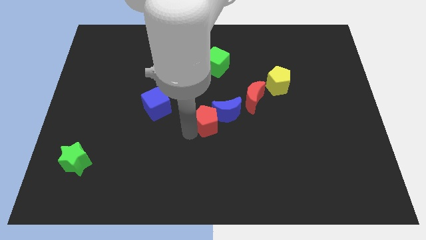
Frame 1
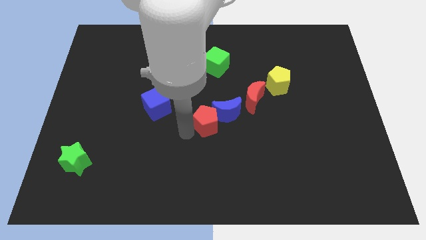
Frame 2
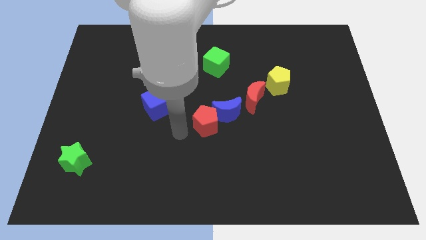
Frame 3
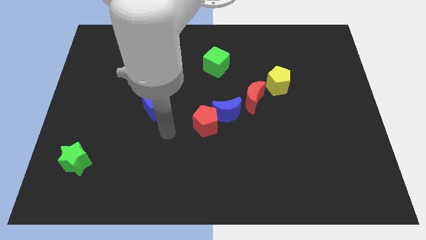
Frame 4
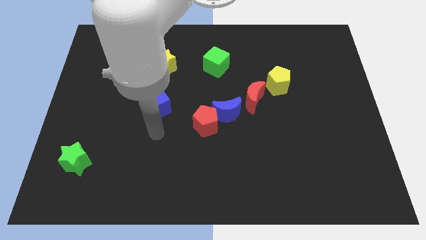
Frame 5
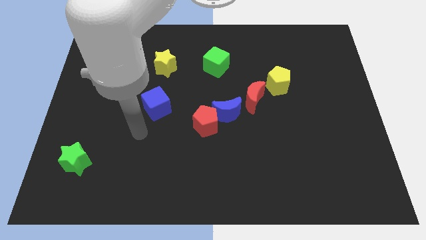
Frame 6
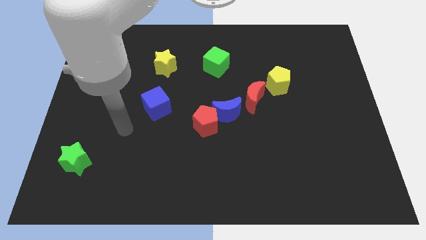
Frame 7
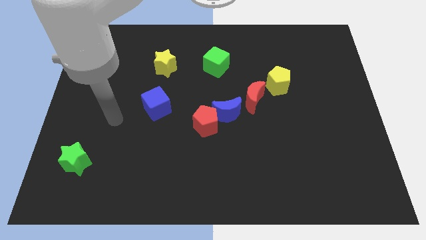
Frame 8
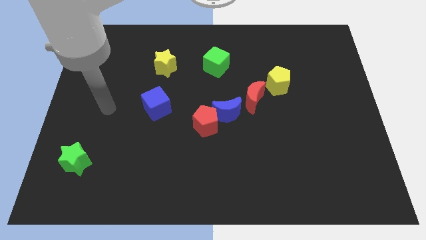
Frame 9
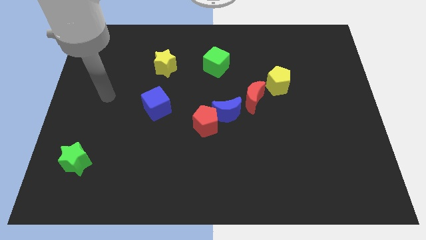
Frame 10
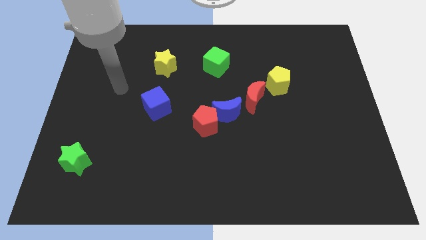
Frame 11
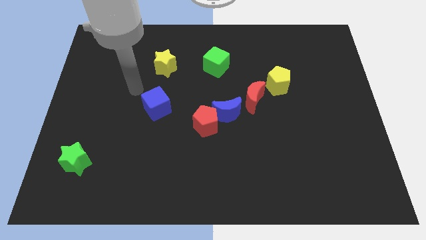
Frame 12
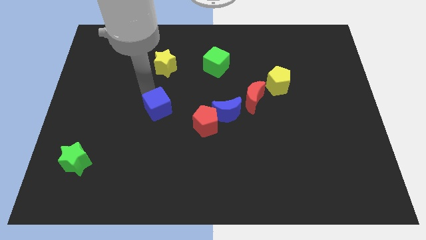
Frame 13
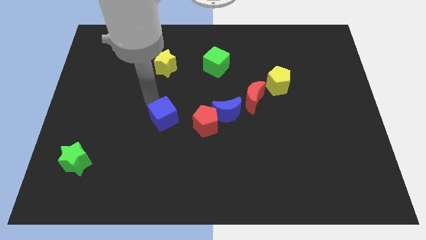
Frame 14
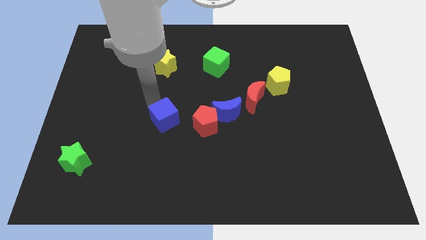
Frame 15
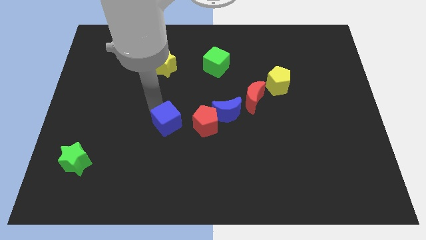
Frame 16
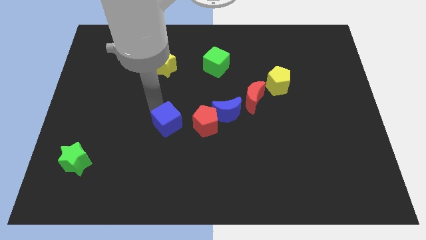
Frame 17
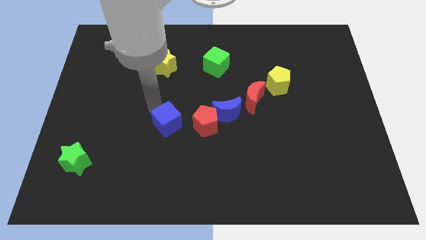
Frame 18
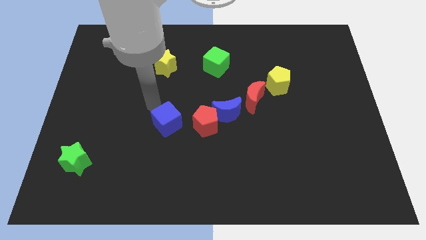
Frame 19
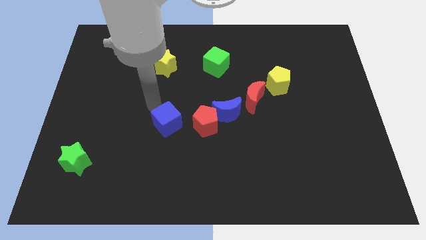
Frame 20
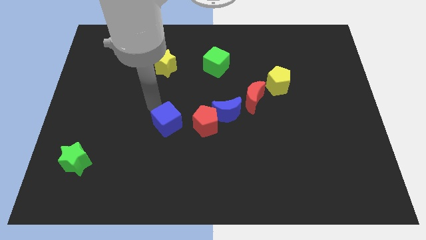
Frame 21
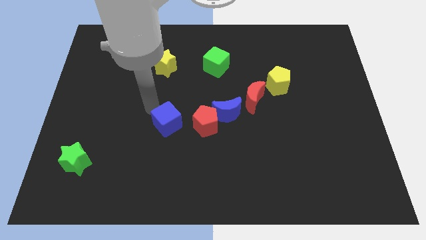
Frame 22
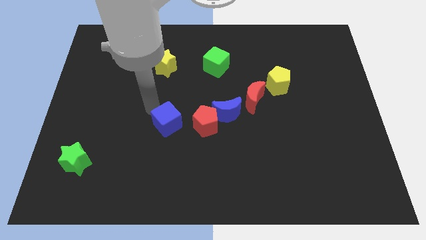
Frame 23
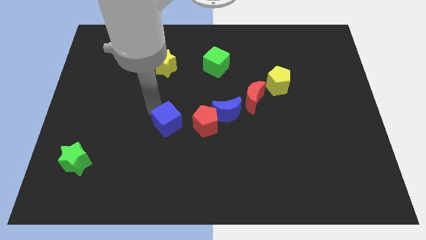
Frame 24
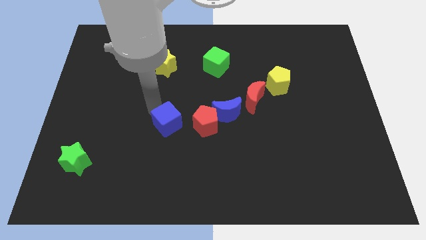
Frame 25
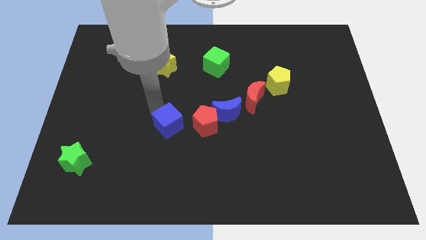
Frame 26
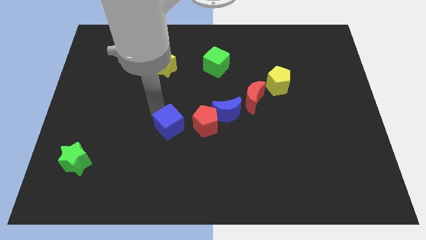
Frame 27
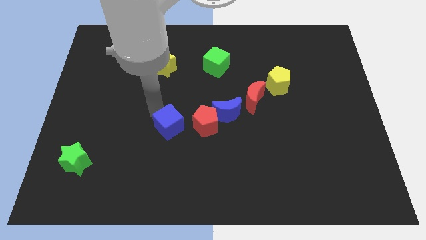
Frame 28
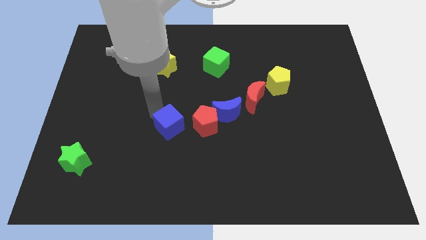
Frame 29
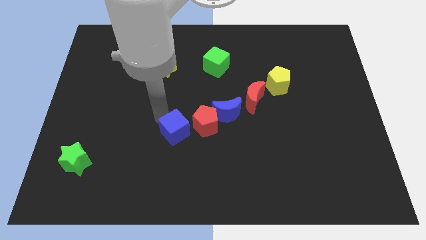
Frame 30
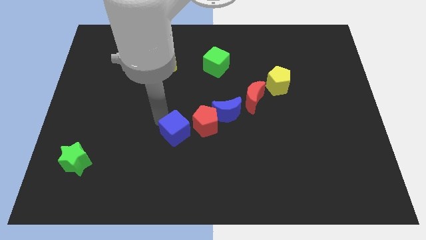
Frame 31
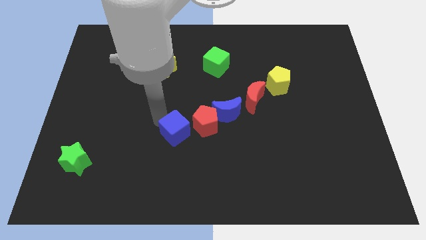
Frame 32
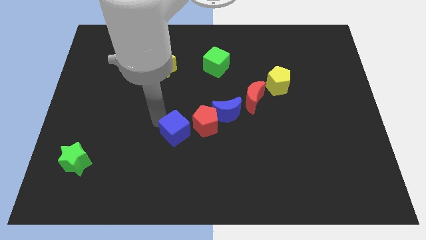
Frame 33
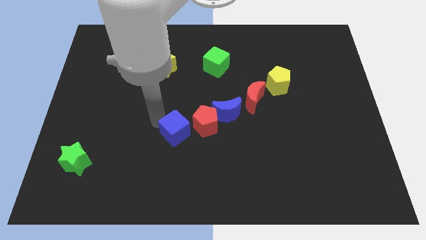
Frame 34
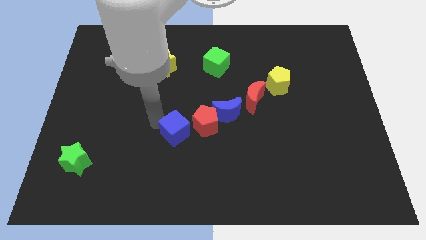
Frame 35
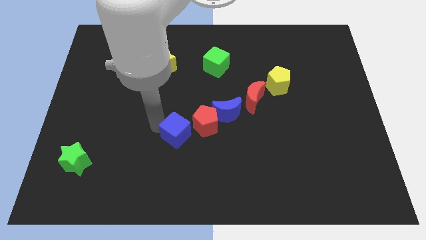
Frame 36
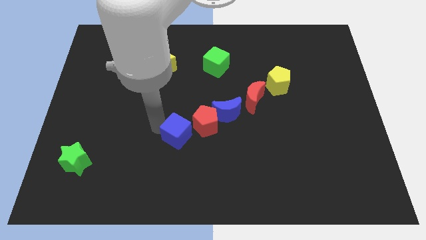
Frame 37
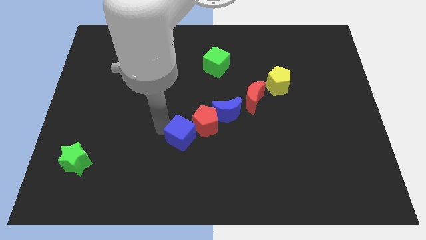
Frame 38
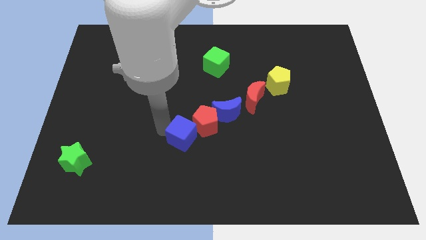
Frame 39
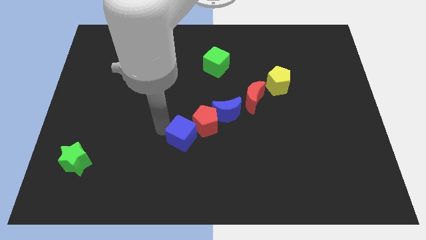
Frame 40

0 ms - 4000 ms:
place the blue cube to the left side of red pentagon

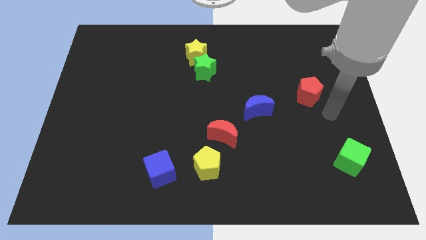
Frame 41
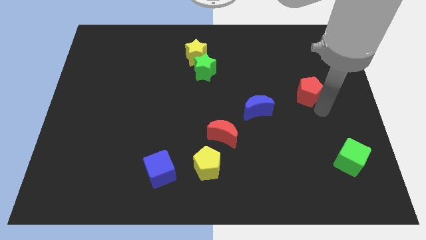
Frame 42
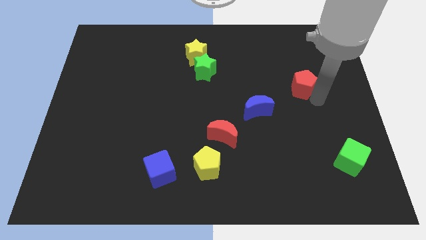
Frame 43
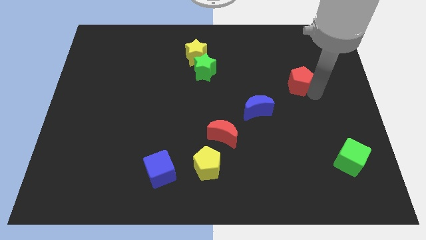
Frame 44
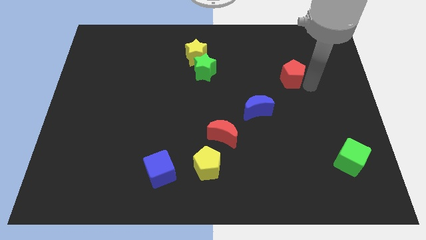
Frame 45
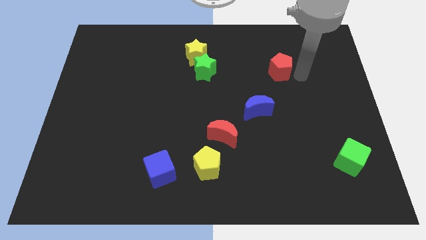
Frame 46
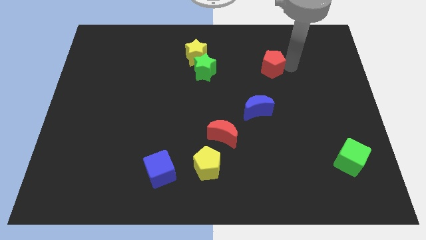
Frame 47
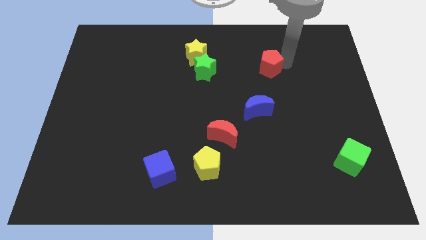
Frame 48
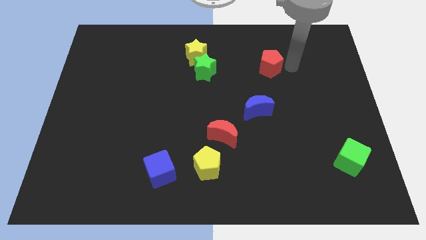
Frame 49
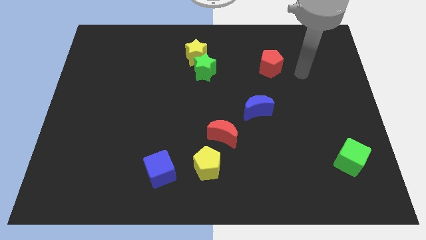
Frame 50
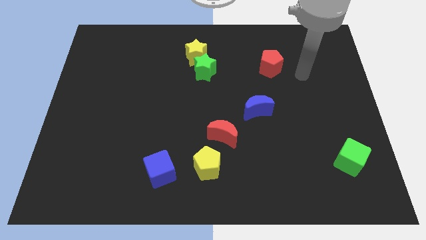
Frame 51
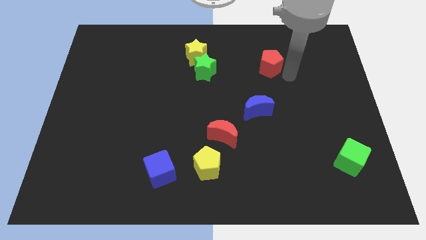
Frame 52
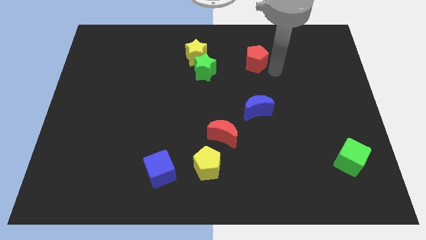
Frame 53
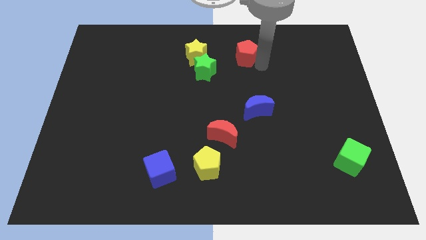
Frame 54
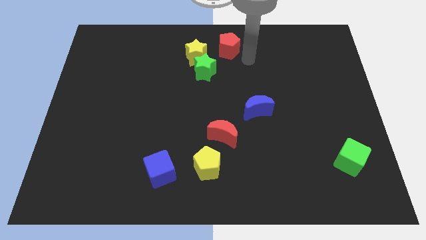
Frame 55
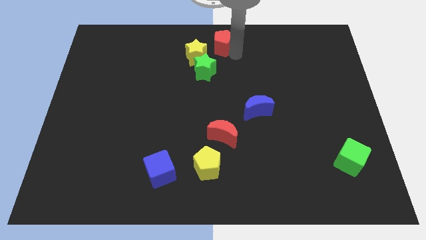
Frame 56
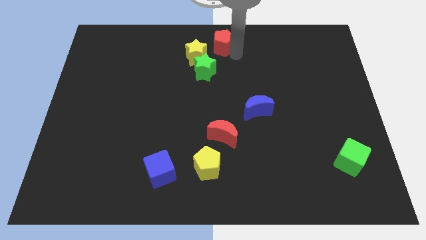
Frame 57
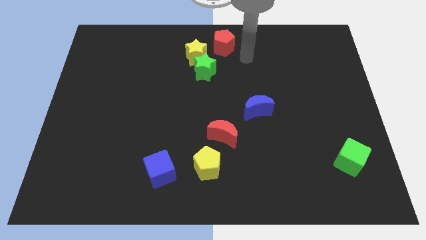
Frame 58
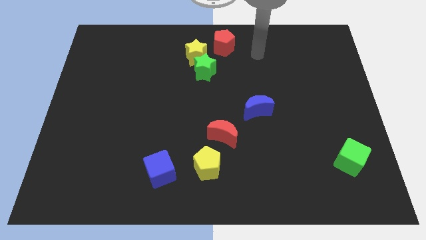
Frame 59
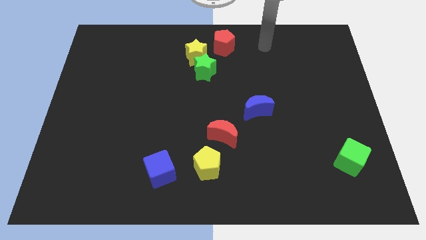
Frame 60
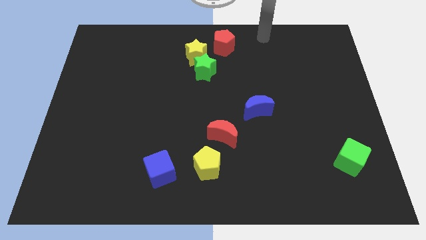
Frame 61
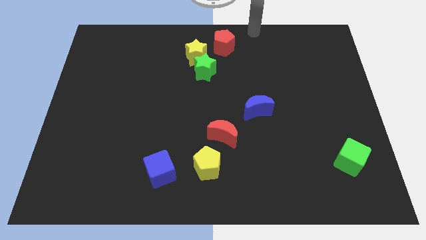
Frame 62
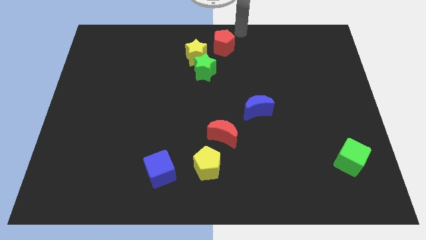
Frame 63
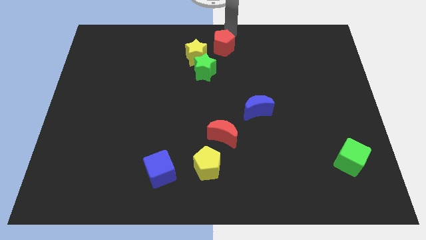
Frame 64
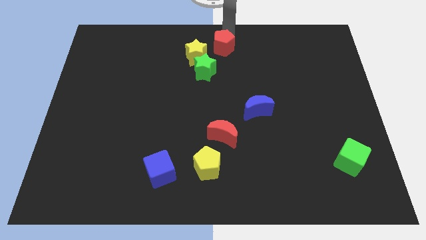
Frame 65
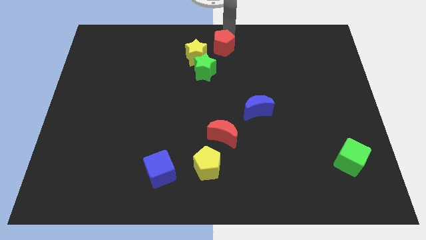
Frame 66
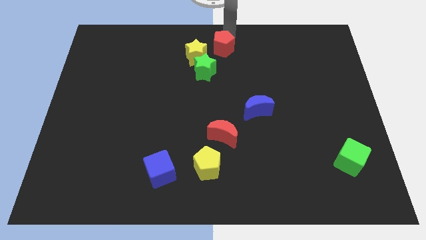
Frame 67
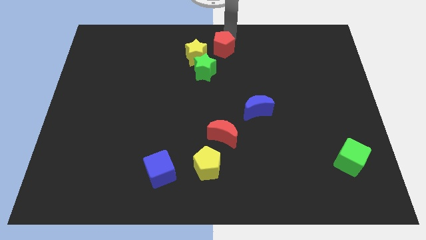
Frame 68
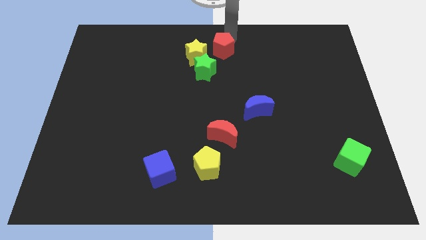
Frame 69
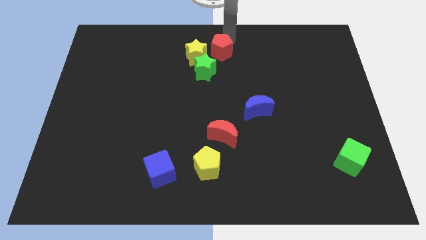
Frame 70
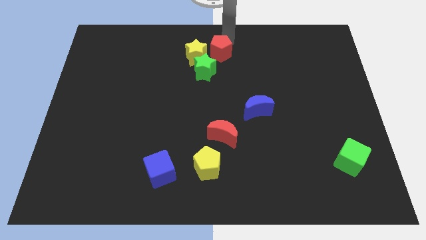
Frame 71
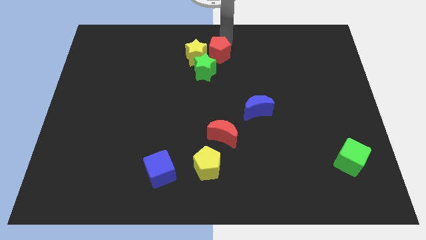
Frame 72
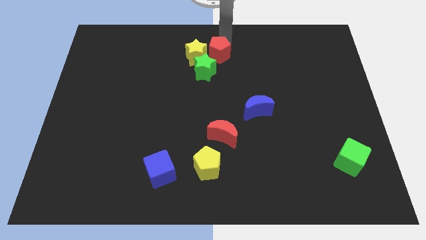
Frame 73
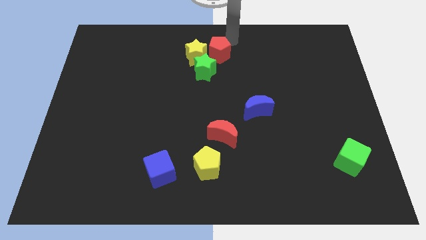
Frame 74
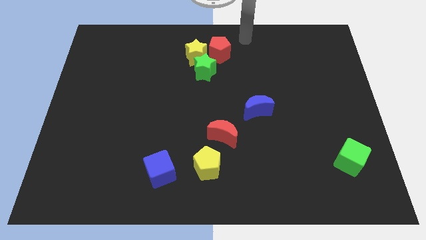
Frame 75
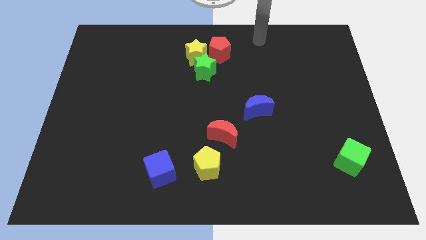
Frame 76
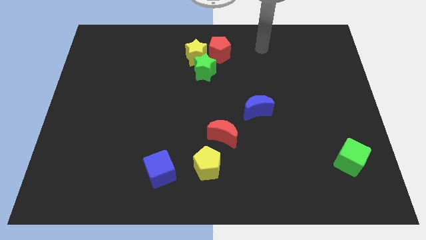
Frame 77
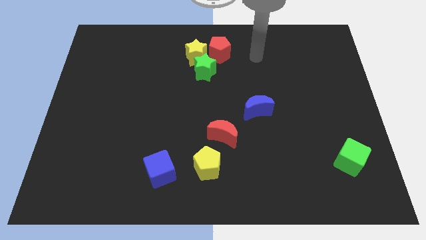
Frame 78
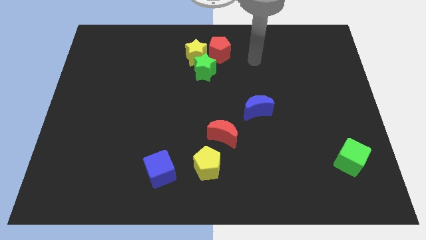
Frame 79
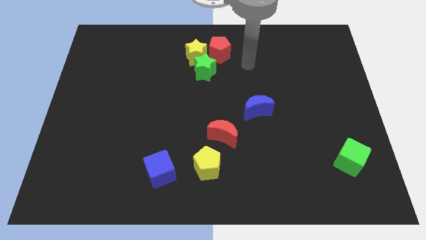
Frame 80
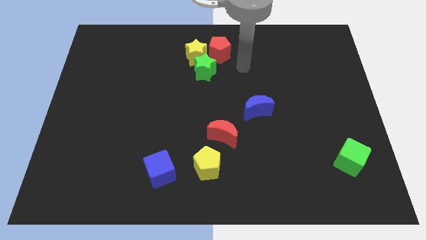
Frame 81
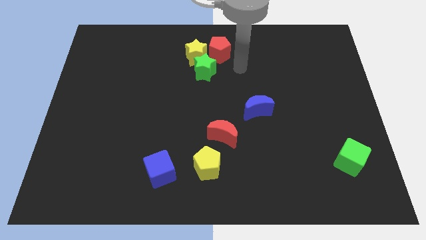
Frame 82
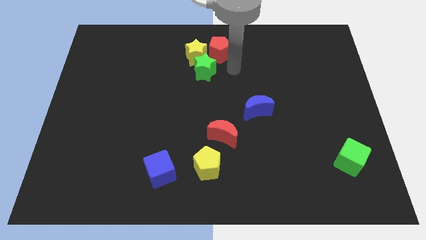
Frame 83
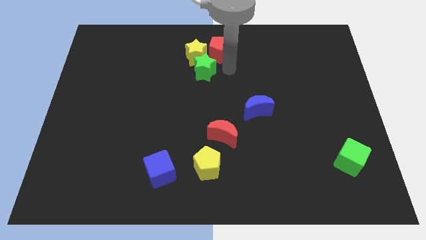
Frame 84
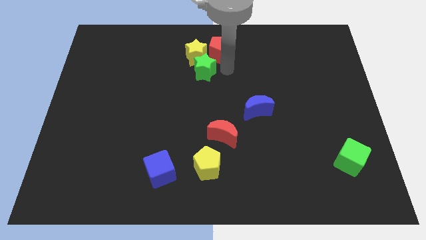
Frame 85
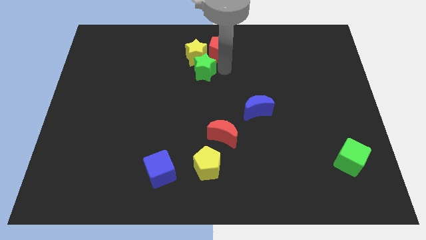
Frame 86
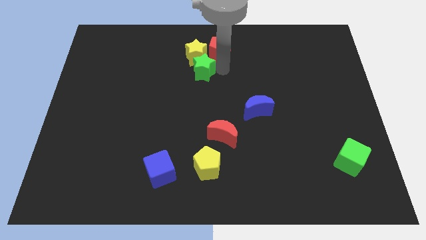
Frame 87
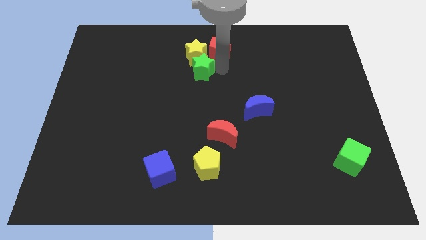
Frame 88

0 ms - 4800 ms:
place red pentagon near yellow star
